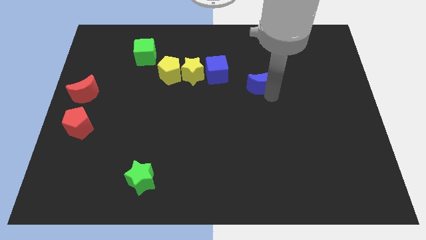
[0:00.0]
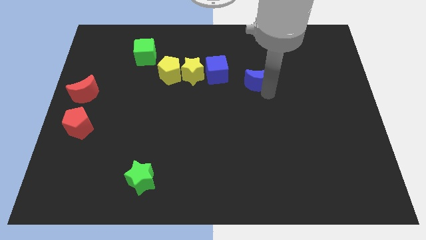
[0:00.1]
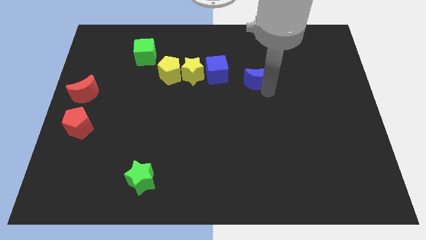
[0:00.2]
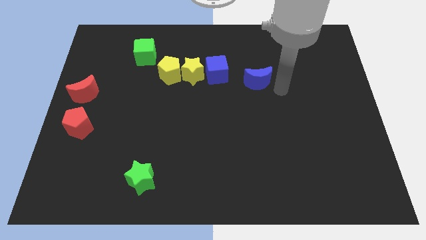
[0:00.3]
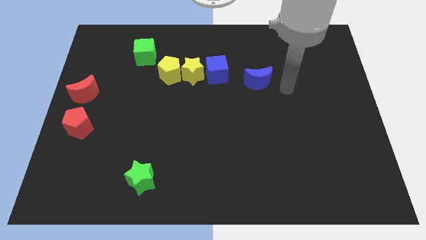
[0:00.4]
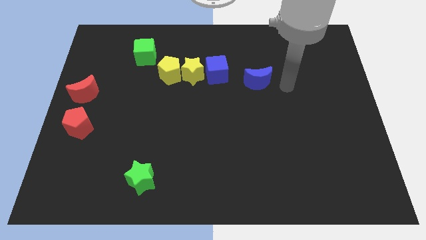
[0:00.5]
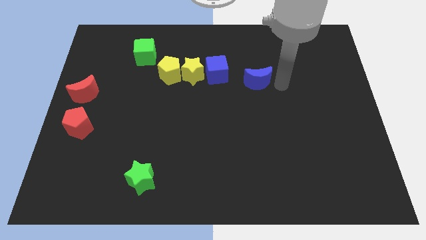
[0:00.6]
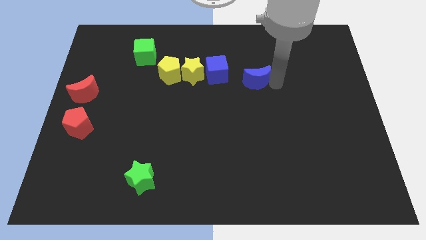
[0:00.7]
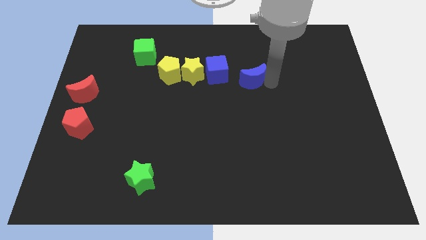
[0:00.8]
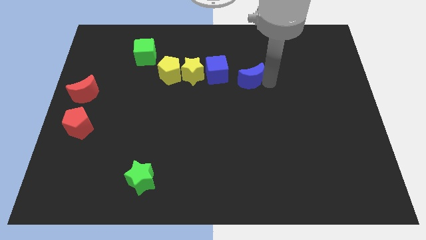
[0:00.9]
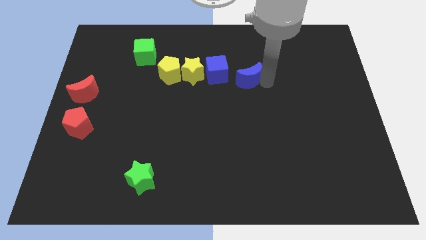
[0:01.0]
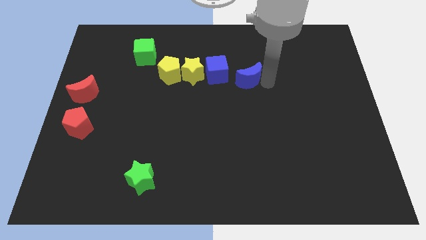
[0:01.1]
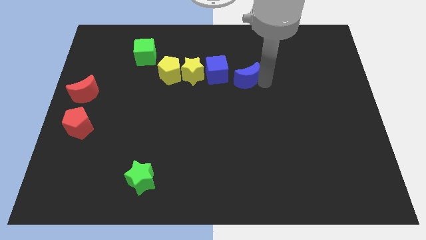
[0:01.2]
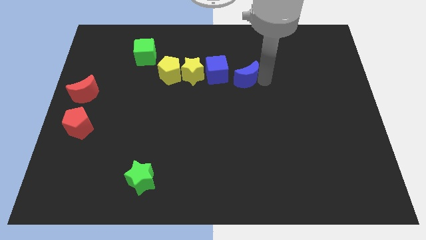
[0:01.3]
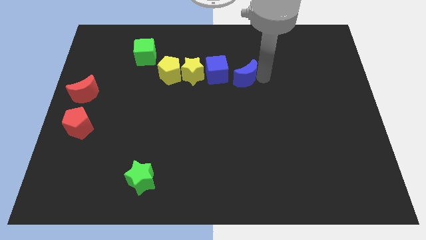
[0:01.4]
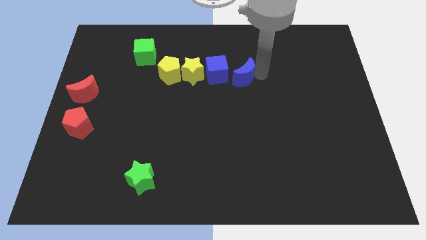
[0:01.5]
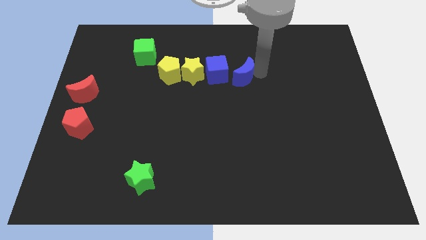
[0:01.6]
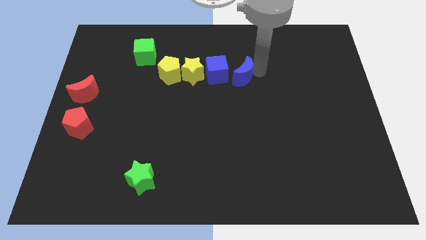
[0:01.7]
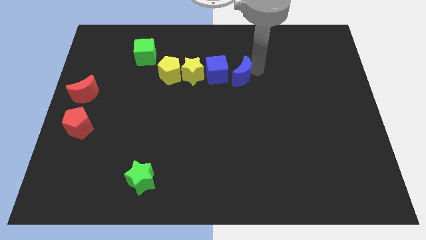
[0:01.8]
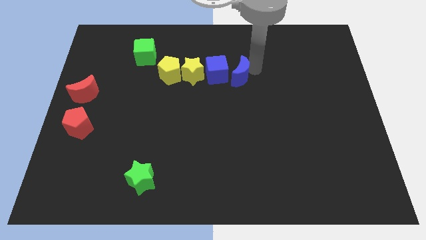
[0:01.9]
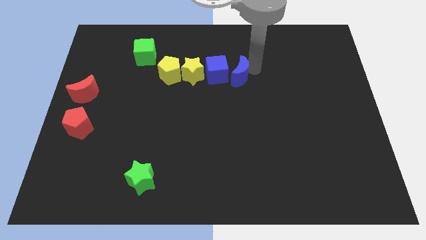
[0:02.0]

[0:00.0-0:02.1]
move the blue crescent to the right of the blue cube

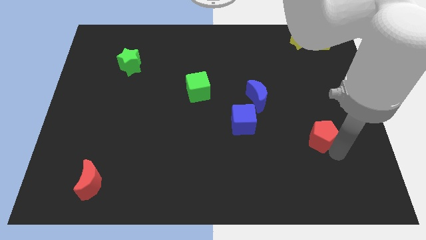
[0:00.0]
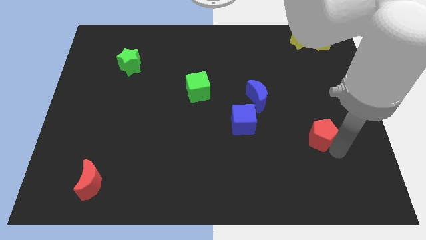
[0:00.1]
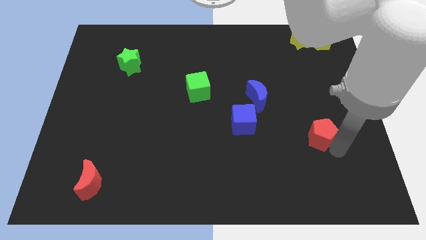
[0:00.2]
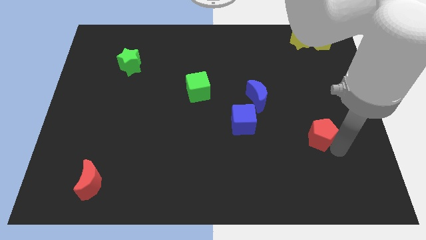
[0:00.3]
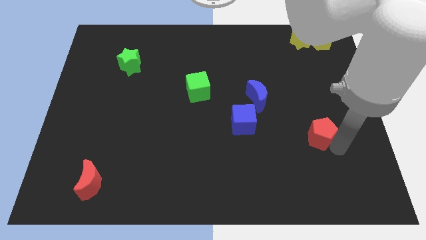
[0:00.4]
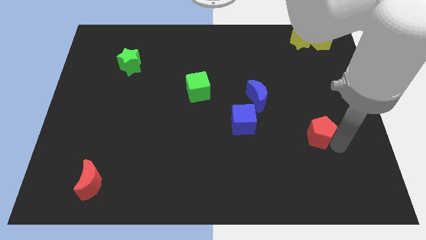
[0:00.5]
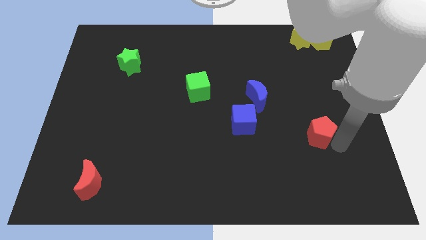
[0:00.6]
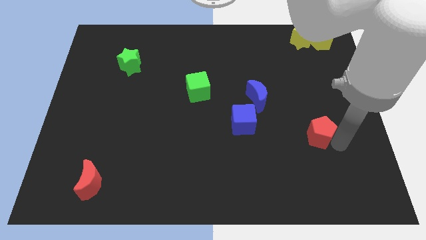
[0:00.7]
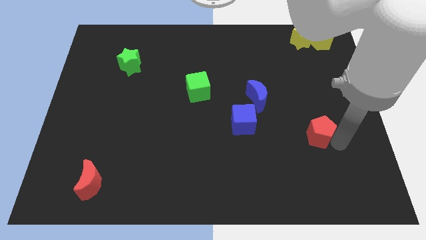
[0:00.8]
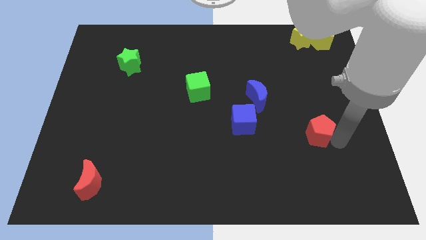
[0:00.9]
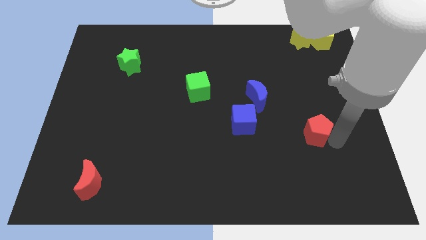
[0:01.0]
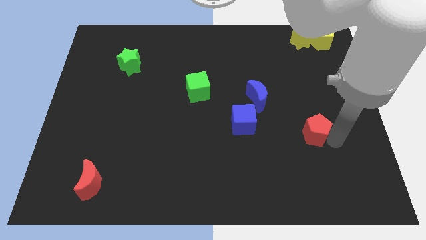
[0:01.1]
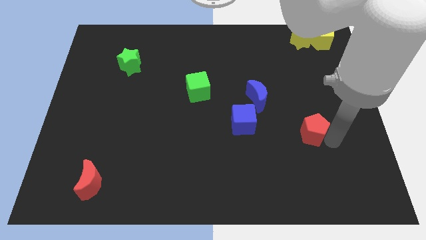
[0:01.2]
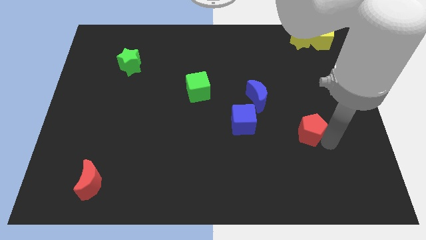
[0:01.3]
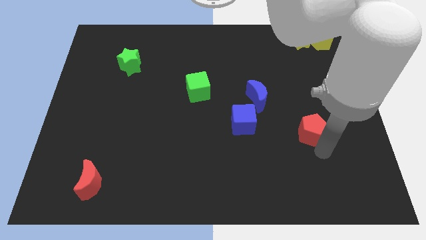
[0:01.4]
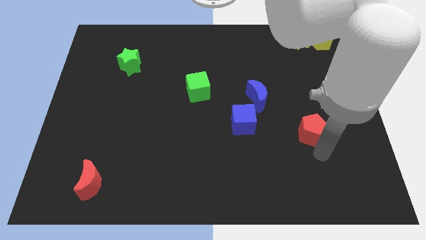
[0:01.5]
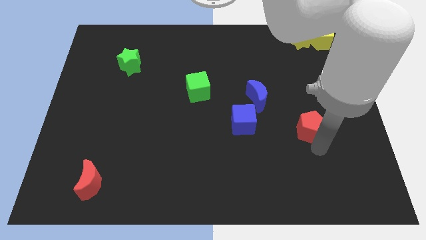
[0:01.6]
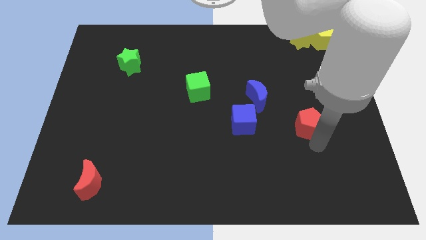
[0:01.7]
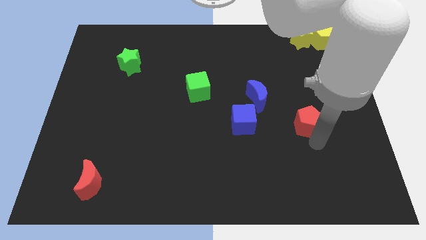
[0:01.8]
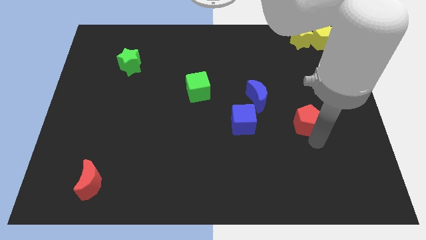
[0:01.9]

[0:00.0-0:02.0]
place red pentagon to the right of blue cube

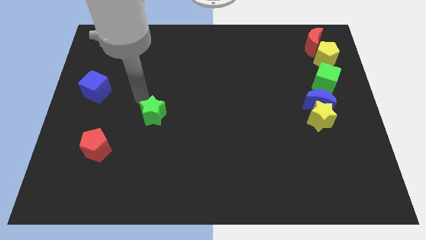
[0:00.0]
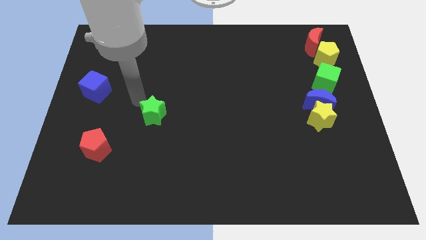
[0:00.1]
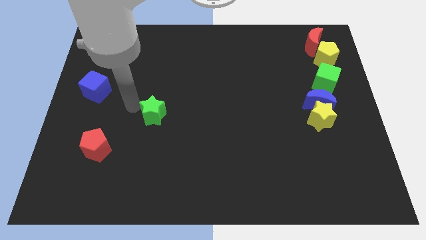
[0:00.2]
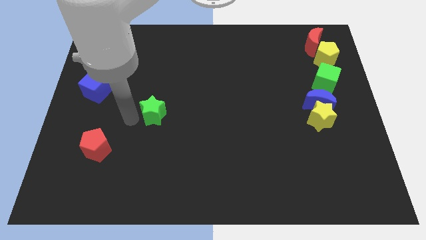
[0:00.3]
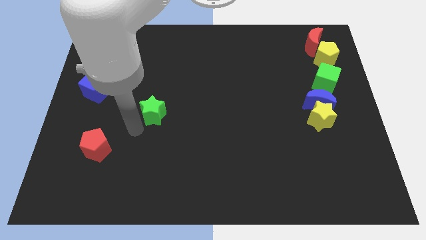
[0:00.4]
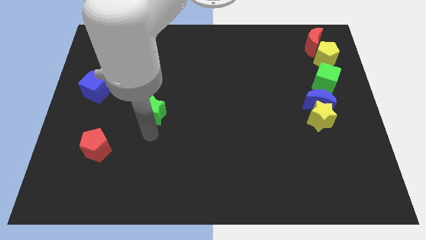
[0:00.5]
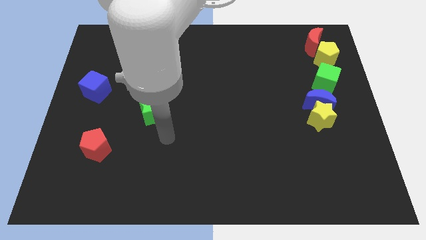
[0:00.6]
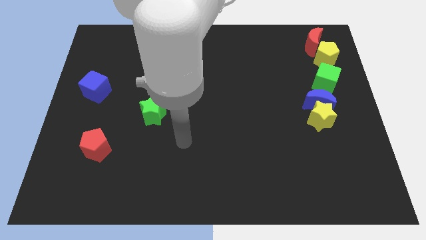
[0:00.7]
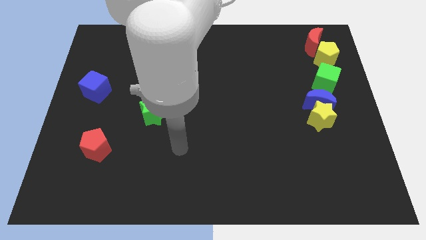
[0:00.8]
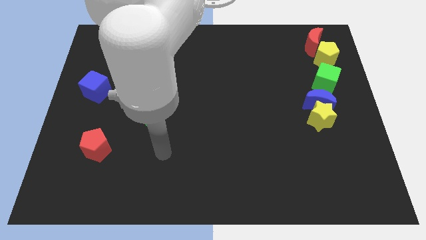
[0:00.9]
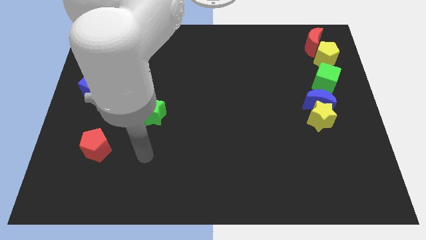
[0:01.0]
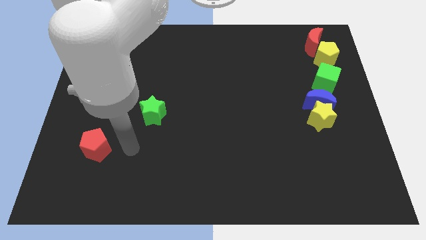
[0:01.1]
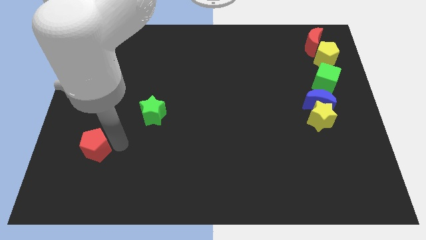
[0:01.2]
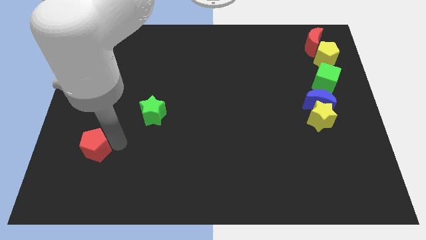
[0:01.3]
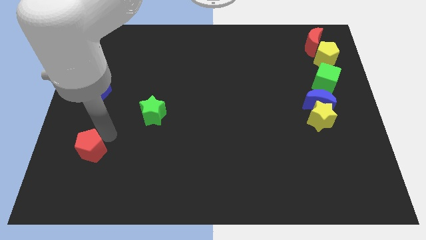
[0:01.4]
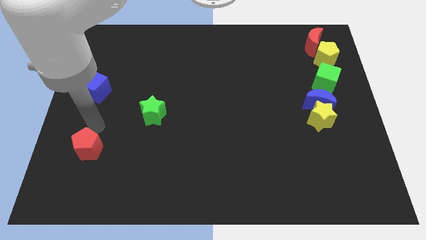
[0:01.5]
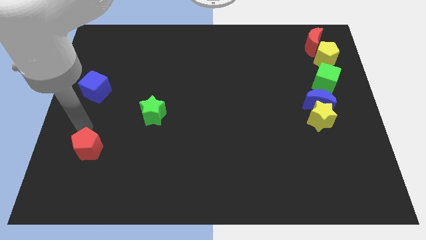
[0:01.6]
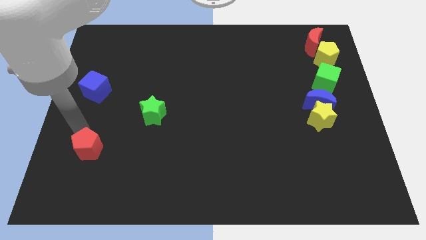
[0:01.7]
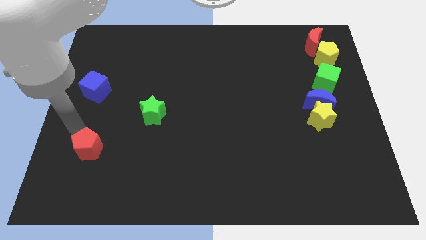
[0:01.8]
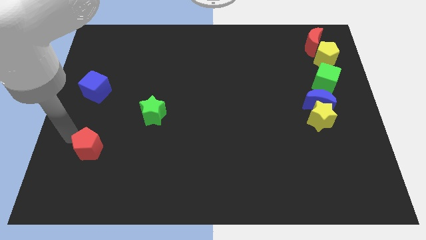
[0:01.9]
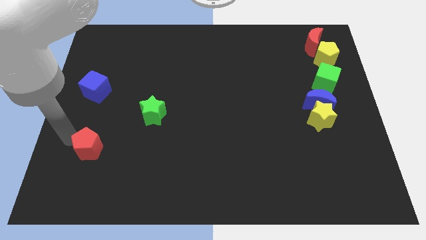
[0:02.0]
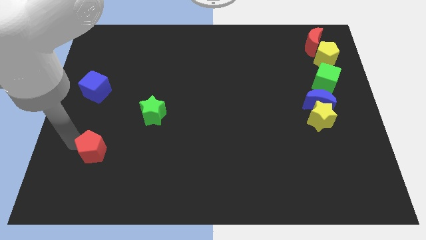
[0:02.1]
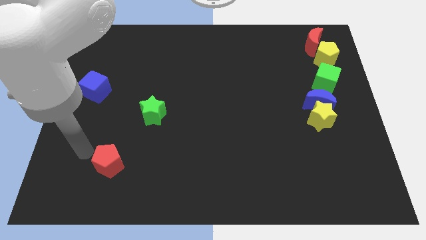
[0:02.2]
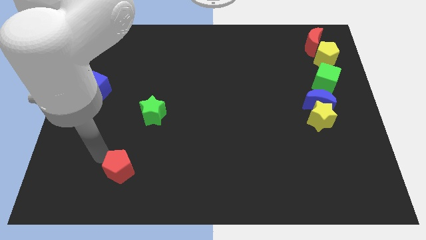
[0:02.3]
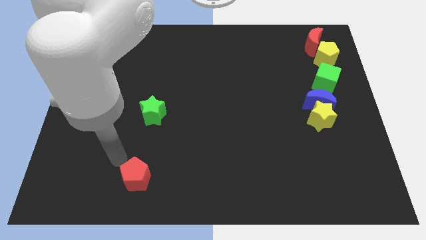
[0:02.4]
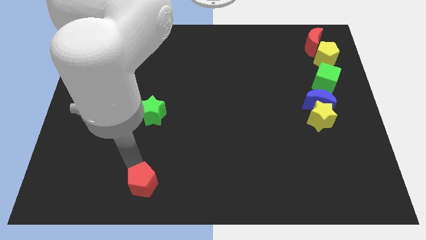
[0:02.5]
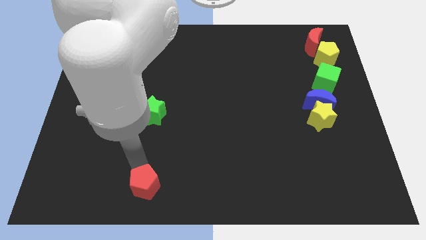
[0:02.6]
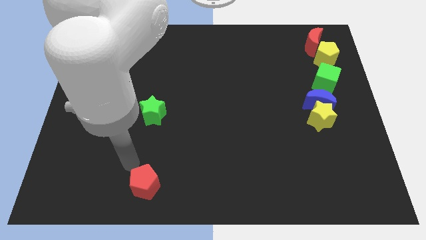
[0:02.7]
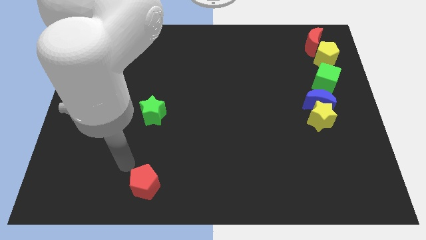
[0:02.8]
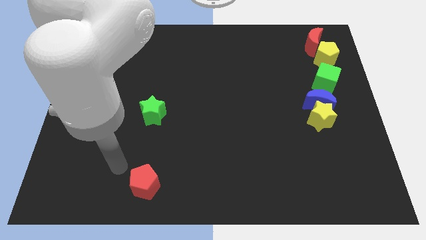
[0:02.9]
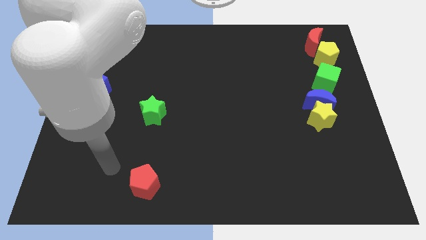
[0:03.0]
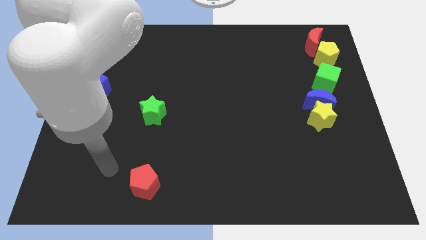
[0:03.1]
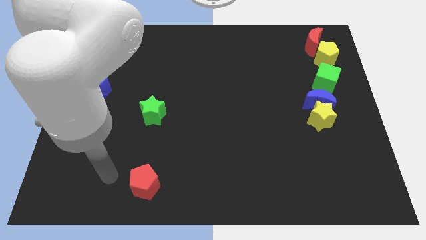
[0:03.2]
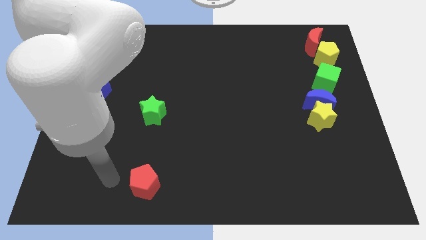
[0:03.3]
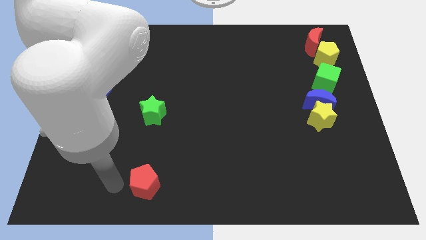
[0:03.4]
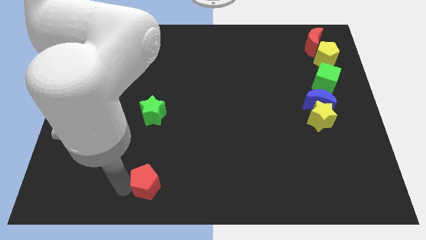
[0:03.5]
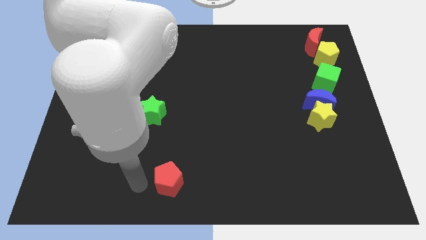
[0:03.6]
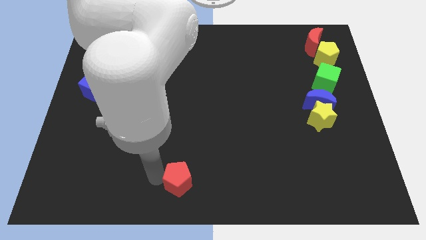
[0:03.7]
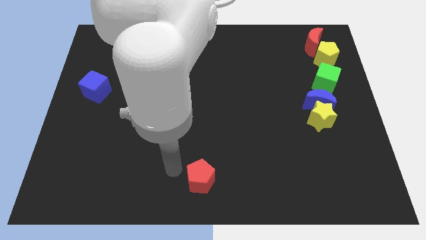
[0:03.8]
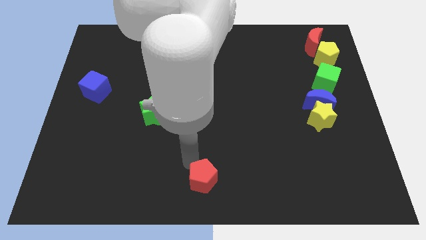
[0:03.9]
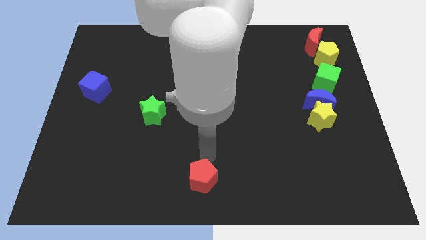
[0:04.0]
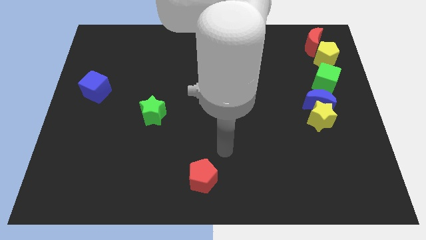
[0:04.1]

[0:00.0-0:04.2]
move the red pentagon towards the bottom center of the board

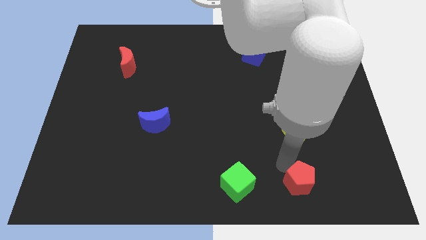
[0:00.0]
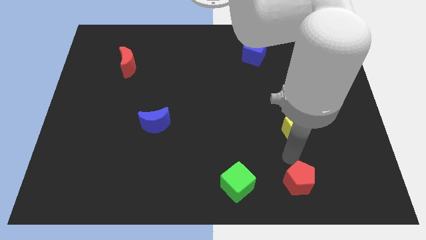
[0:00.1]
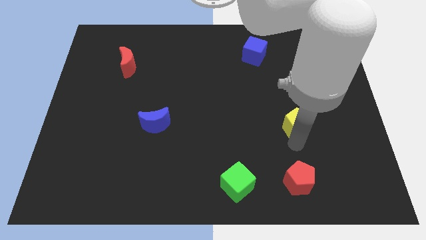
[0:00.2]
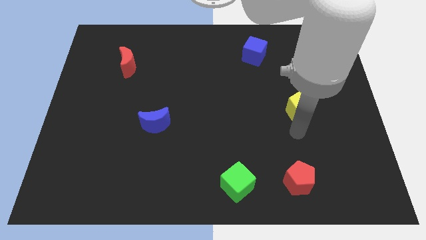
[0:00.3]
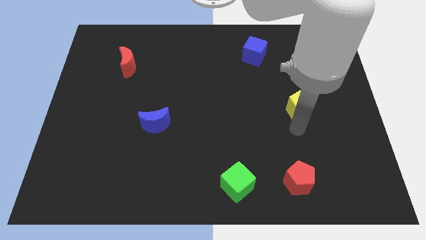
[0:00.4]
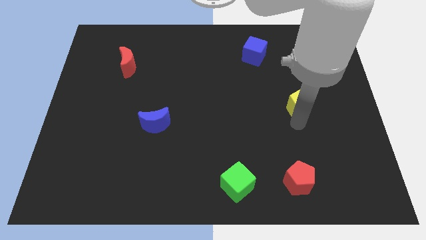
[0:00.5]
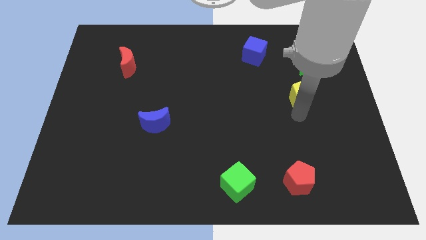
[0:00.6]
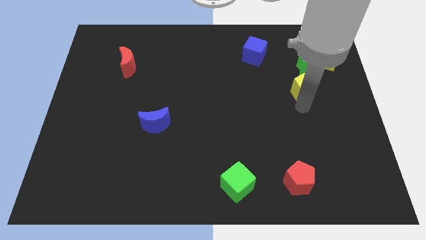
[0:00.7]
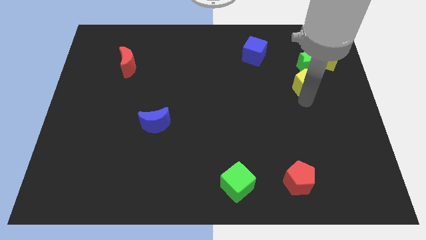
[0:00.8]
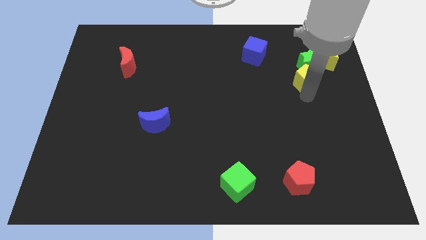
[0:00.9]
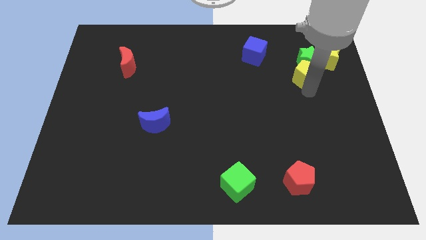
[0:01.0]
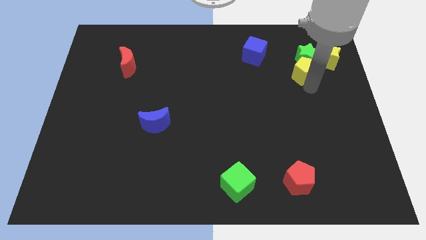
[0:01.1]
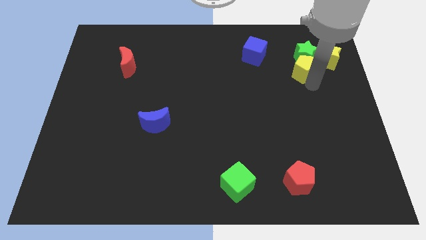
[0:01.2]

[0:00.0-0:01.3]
move the yellow pentagon into the green star
